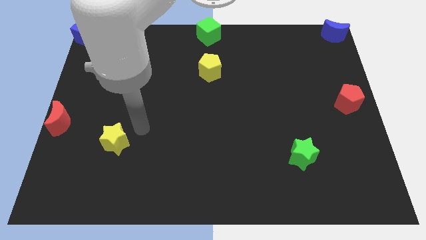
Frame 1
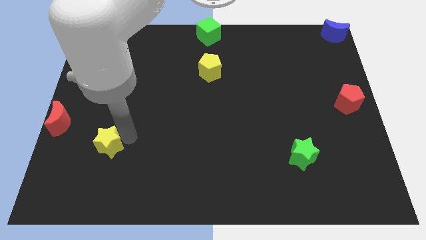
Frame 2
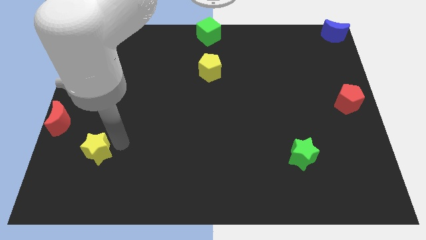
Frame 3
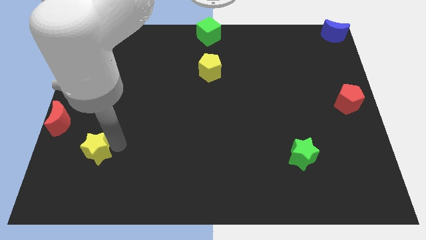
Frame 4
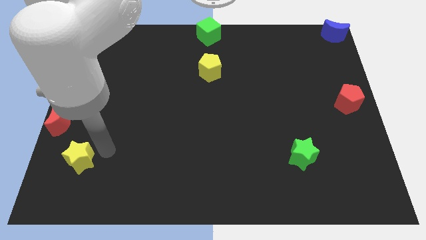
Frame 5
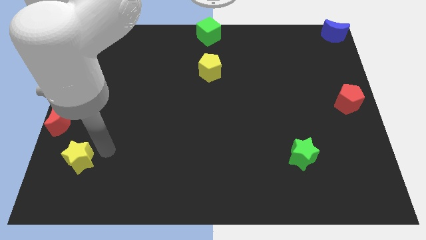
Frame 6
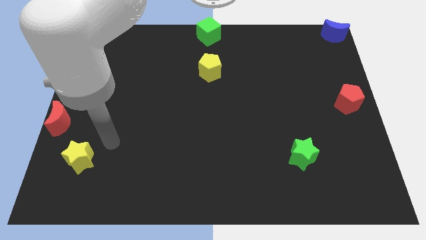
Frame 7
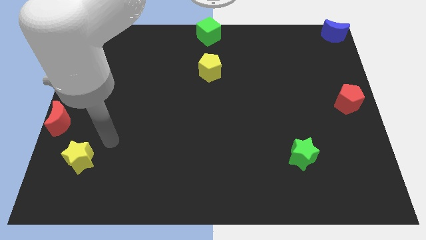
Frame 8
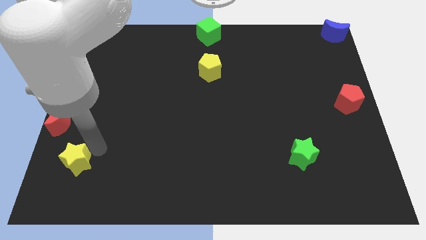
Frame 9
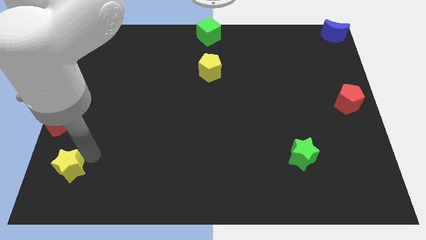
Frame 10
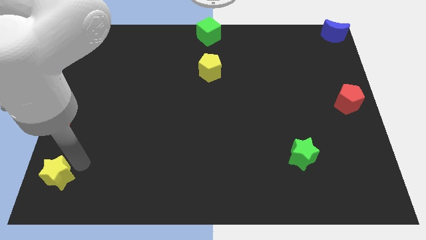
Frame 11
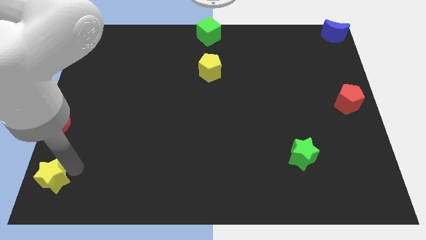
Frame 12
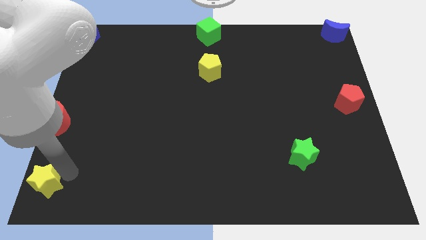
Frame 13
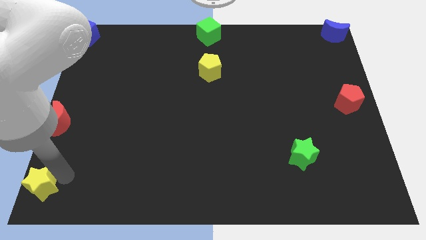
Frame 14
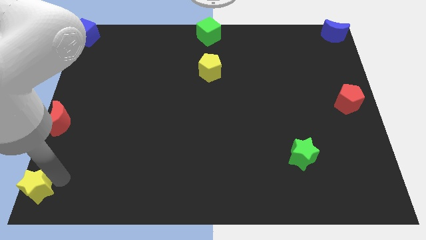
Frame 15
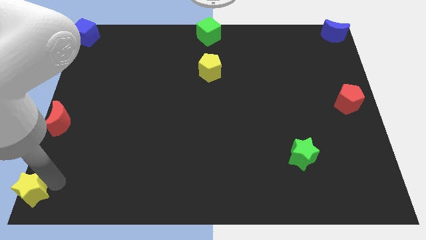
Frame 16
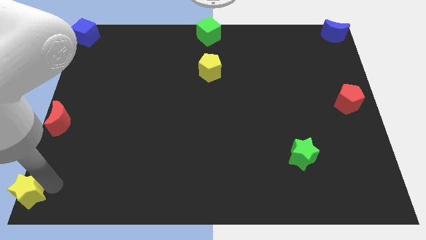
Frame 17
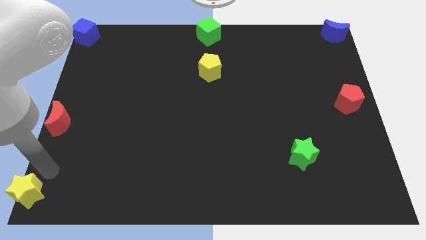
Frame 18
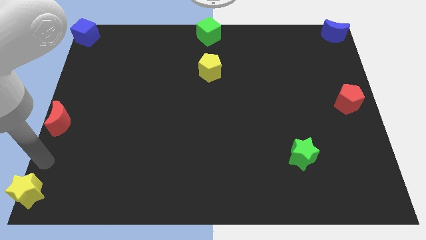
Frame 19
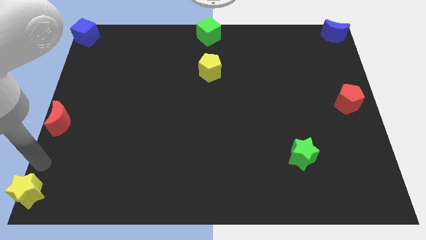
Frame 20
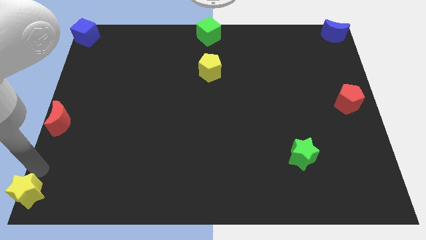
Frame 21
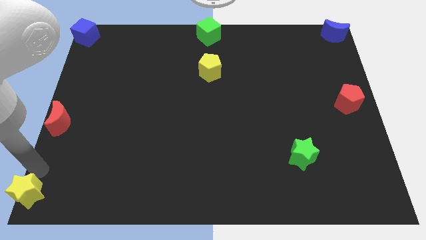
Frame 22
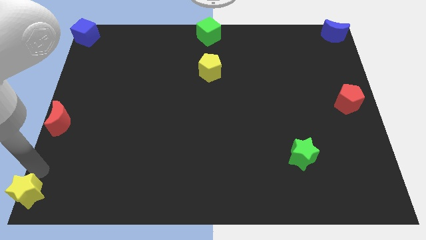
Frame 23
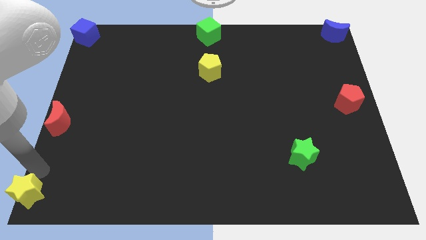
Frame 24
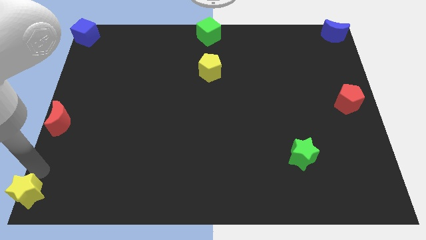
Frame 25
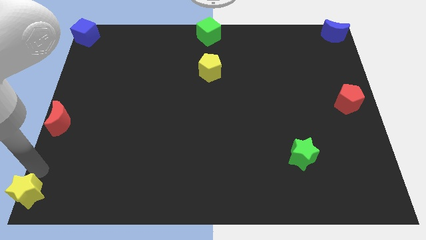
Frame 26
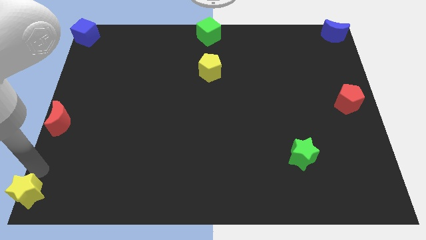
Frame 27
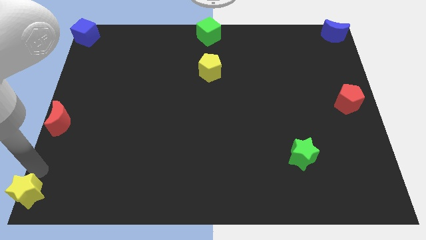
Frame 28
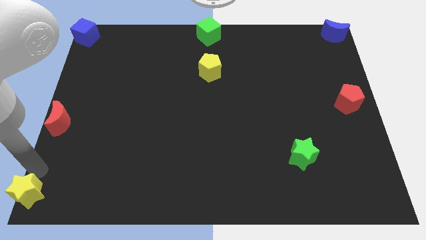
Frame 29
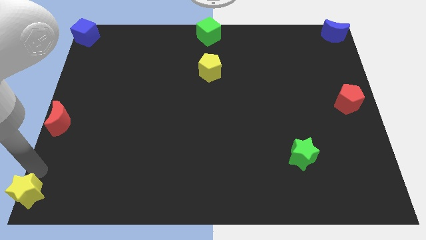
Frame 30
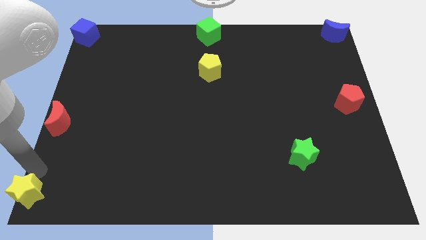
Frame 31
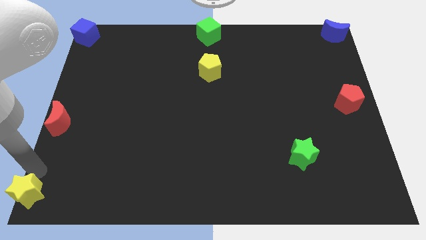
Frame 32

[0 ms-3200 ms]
place the yellow star at the bottom left corner of the board

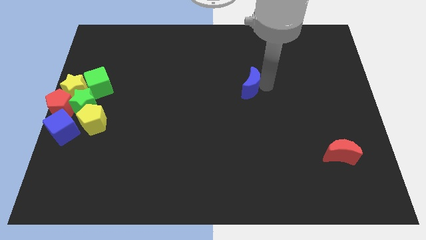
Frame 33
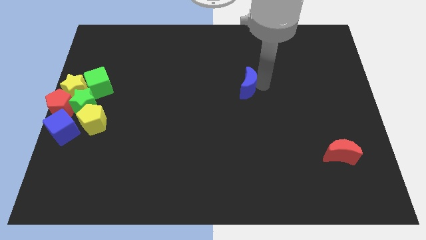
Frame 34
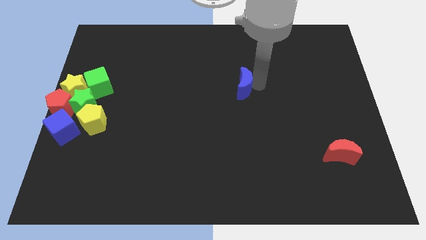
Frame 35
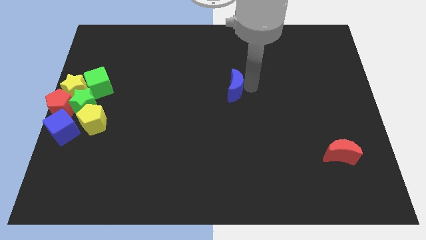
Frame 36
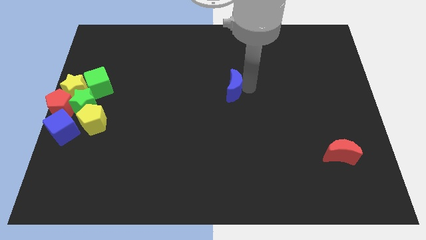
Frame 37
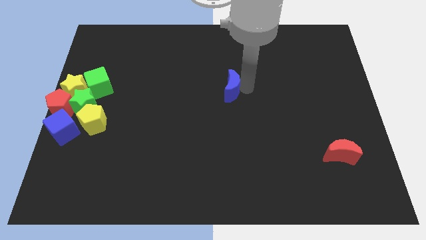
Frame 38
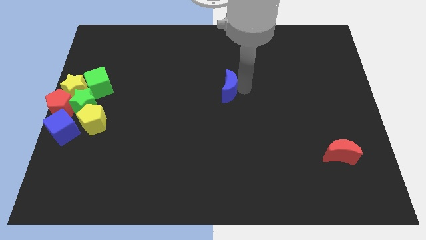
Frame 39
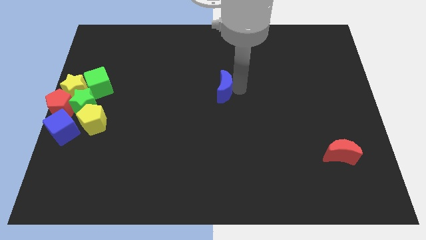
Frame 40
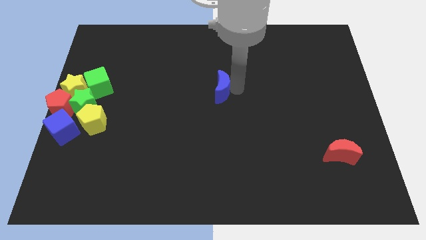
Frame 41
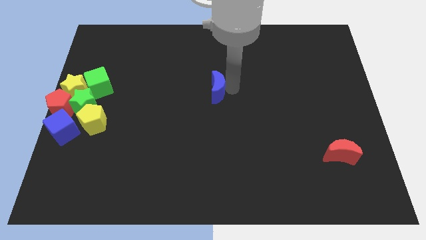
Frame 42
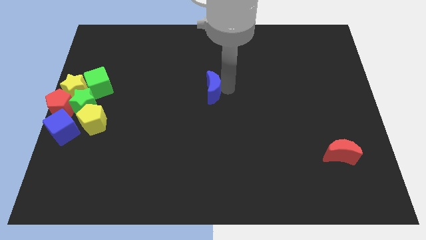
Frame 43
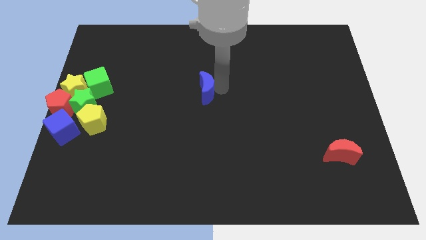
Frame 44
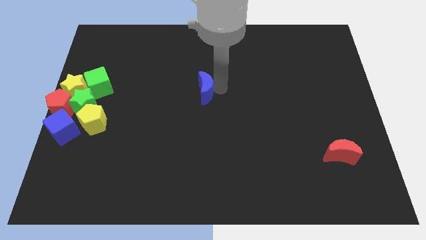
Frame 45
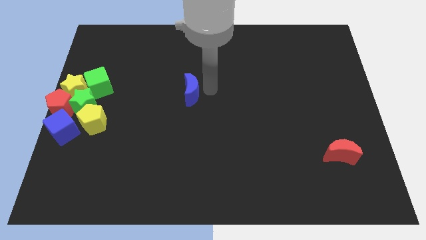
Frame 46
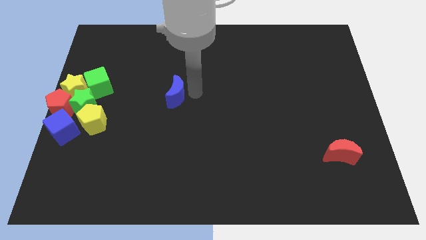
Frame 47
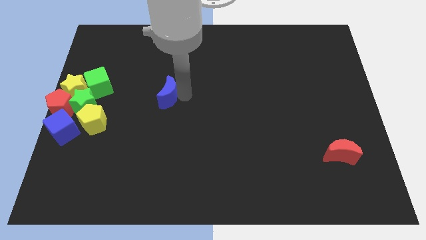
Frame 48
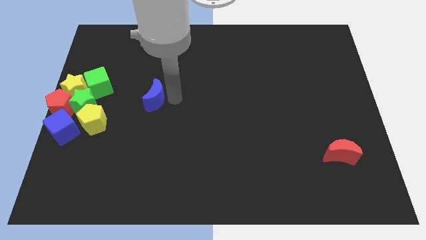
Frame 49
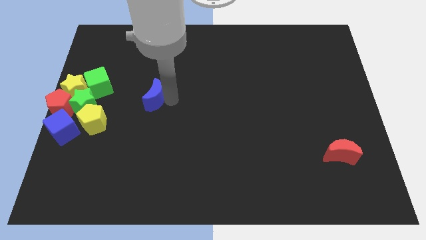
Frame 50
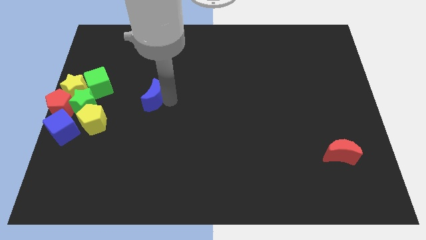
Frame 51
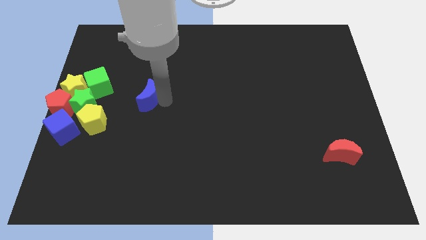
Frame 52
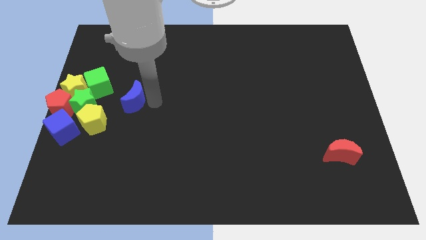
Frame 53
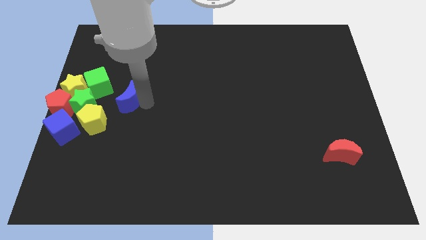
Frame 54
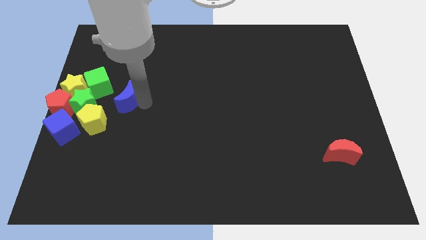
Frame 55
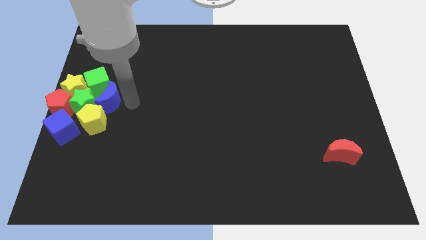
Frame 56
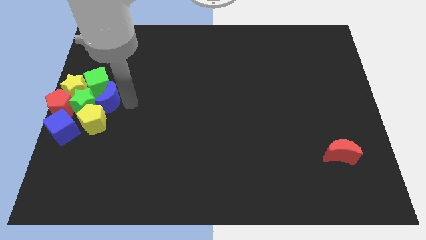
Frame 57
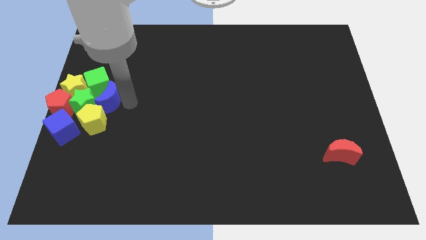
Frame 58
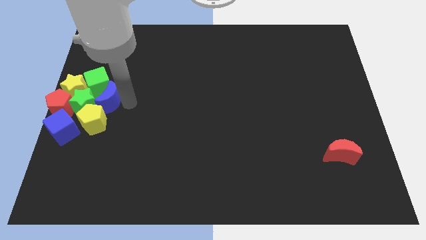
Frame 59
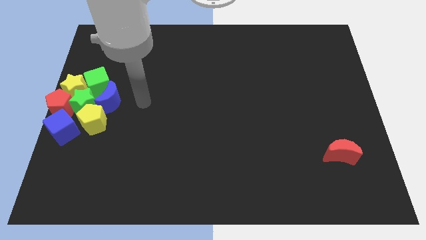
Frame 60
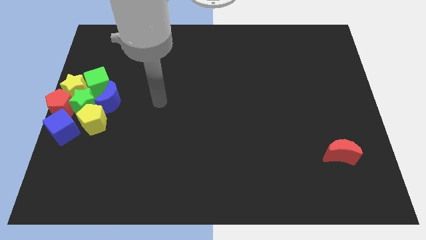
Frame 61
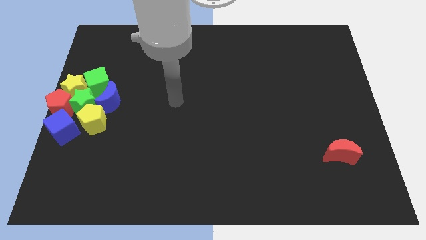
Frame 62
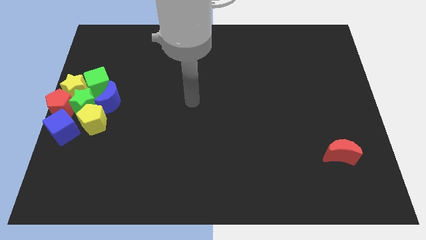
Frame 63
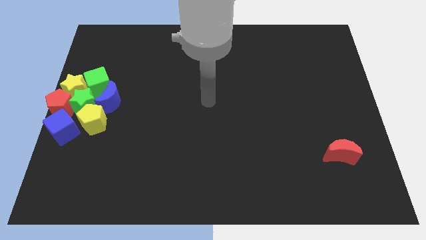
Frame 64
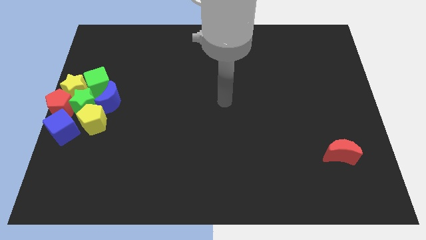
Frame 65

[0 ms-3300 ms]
add the blue moon to the group of blocks

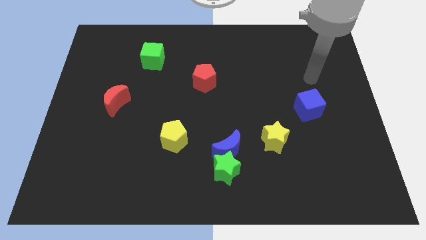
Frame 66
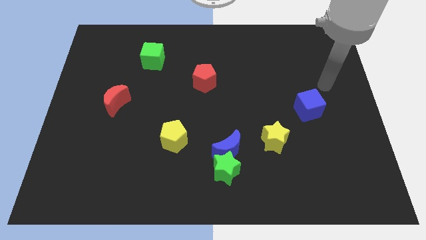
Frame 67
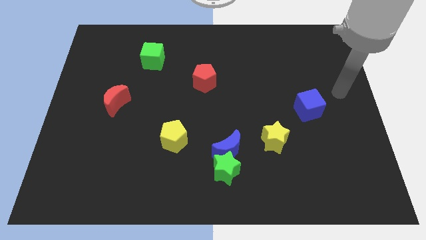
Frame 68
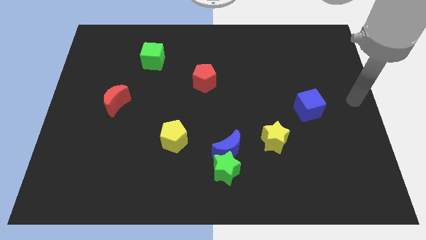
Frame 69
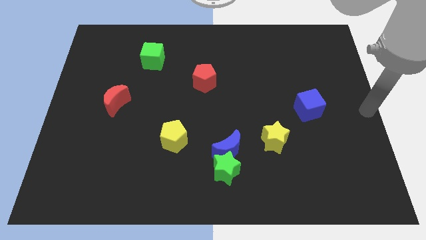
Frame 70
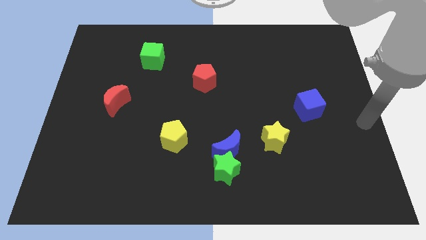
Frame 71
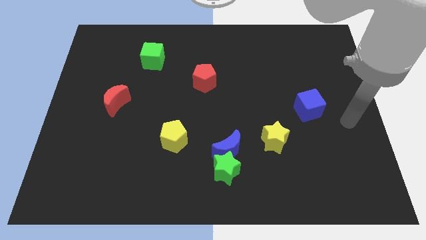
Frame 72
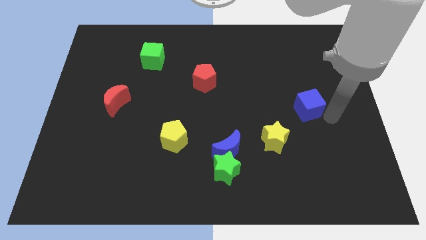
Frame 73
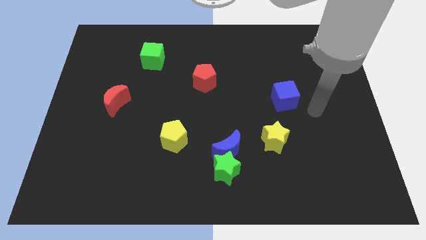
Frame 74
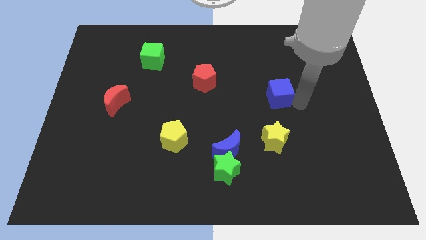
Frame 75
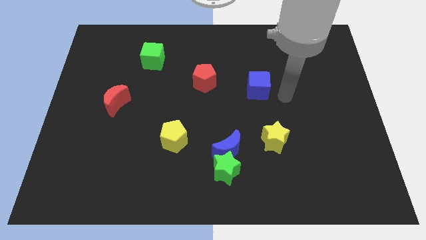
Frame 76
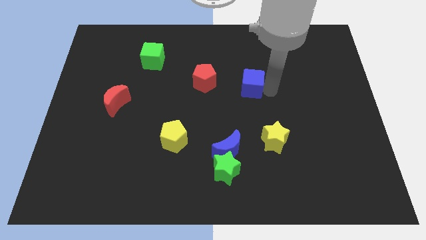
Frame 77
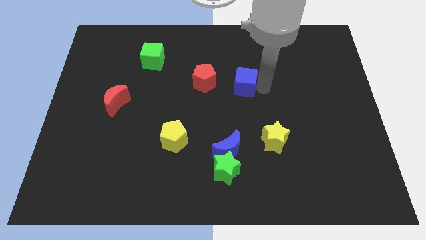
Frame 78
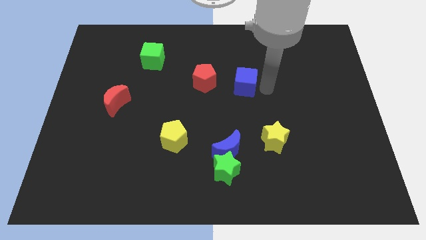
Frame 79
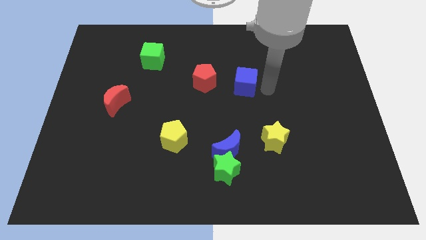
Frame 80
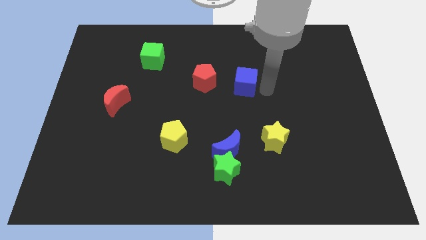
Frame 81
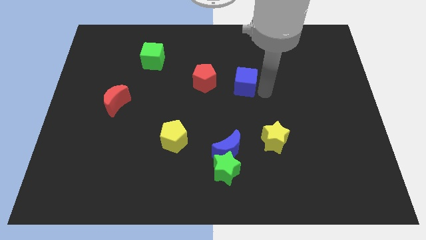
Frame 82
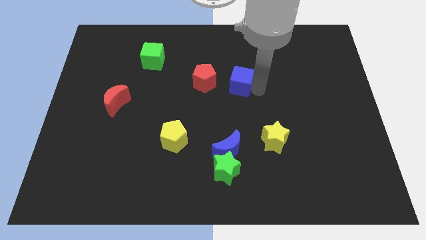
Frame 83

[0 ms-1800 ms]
push the blue cube towards the red pentagon

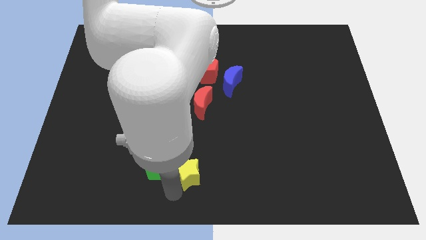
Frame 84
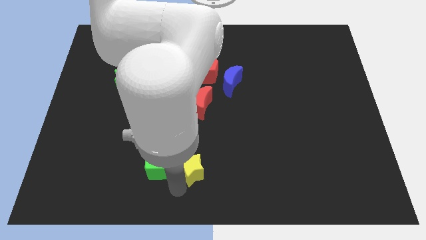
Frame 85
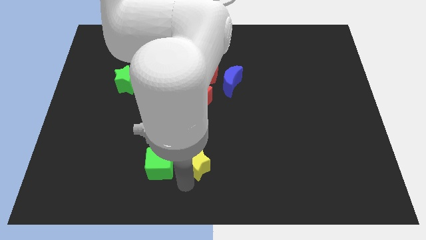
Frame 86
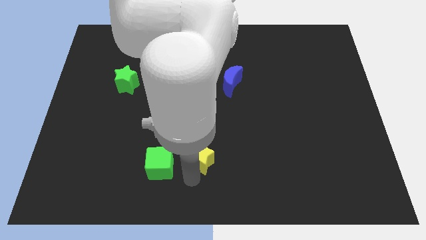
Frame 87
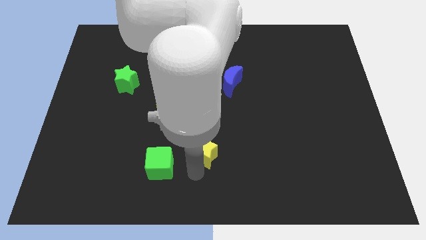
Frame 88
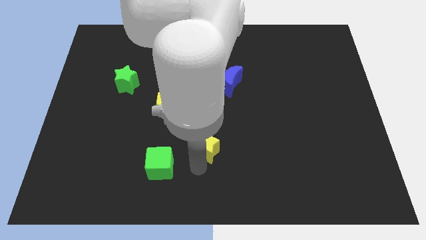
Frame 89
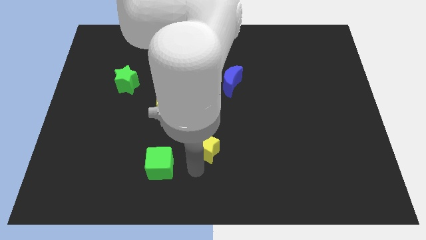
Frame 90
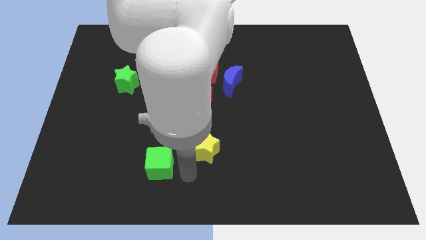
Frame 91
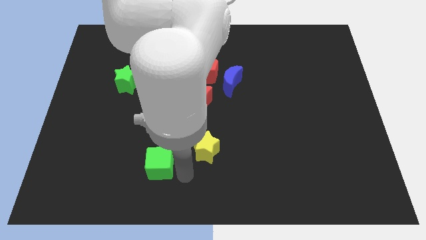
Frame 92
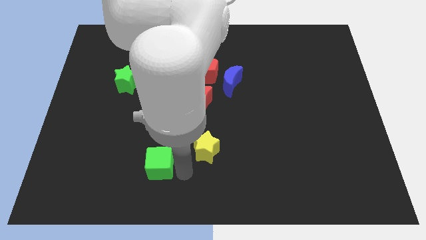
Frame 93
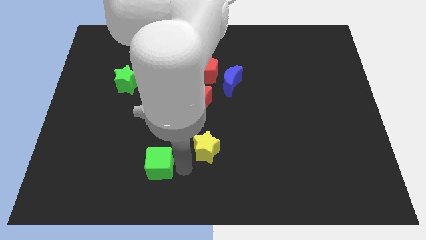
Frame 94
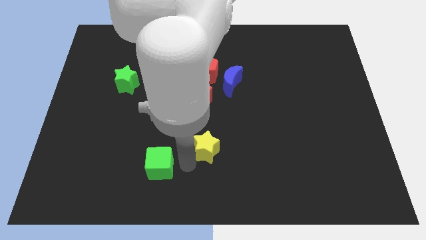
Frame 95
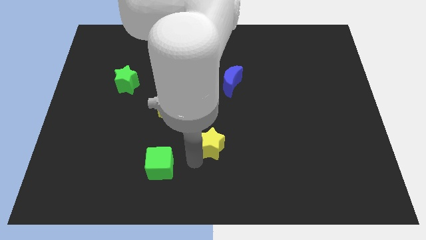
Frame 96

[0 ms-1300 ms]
push the yellow star upwards
